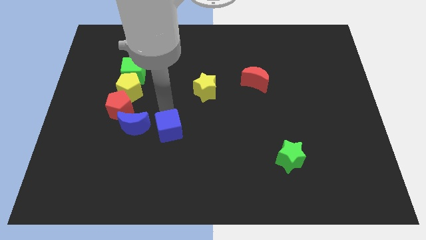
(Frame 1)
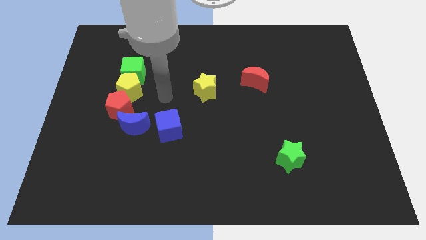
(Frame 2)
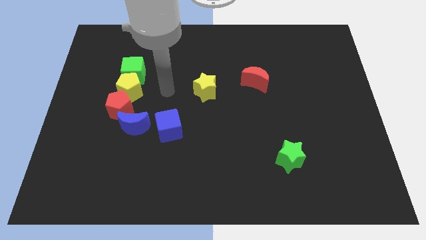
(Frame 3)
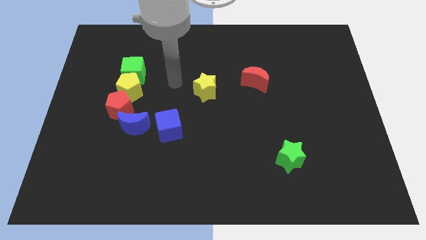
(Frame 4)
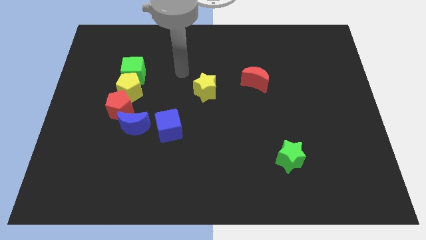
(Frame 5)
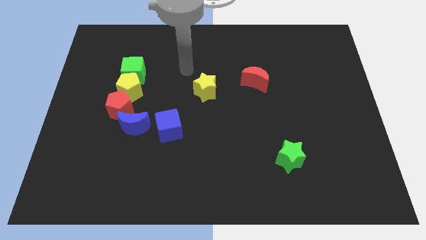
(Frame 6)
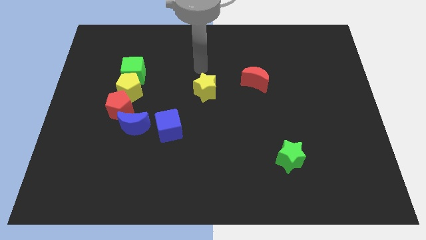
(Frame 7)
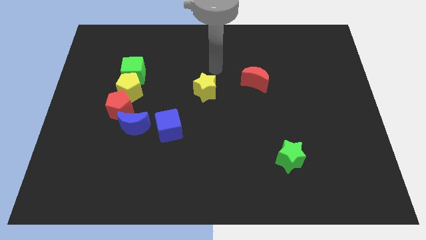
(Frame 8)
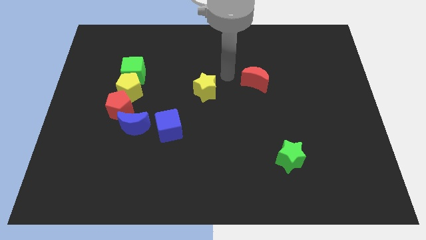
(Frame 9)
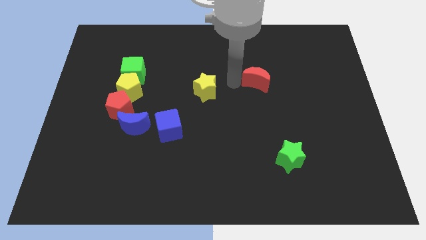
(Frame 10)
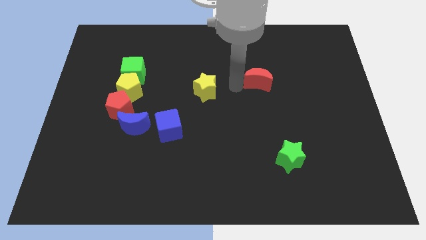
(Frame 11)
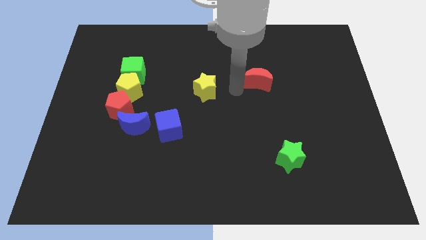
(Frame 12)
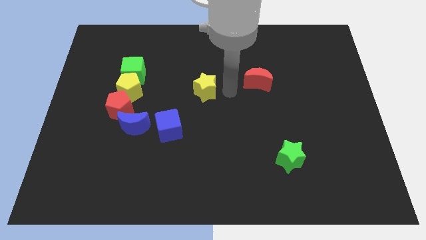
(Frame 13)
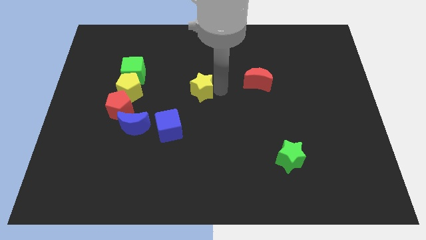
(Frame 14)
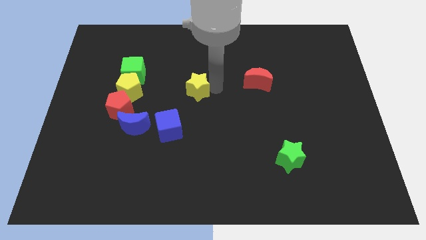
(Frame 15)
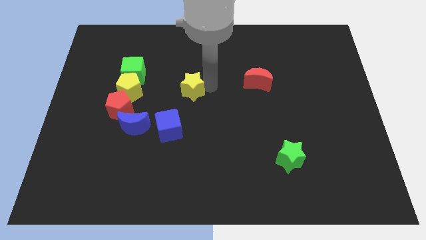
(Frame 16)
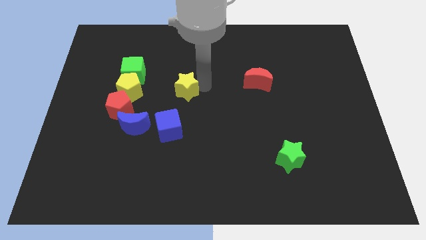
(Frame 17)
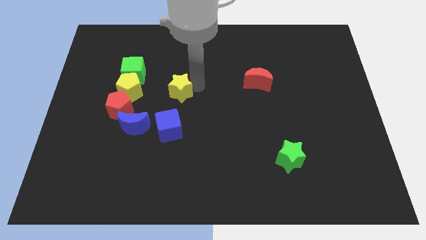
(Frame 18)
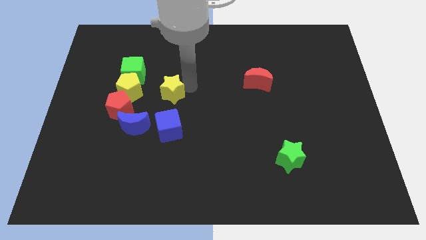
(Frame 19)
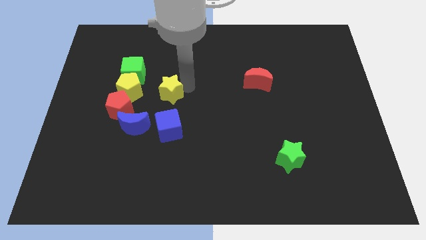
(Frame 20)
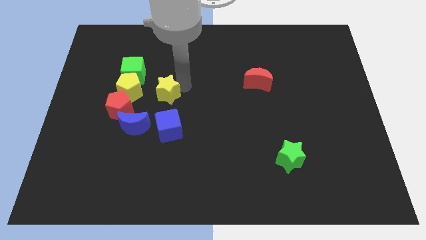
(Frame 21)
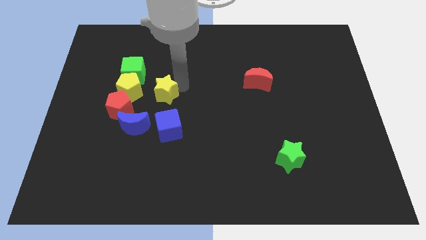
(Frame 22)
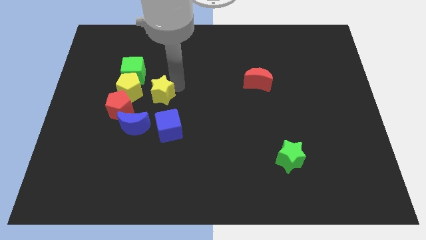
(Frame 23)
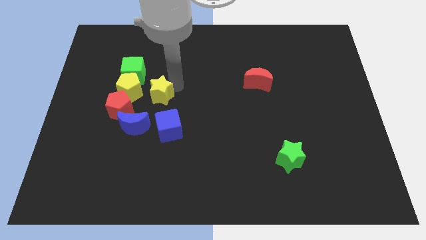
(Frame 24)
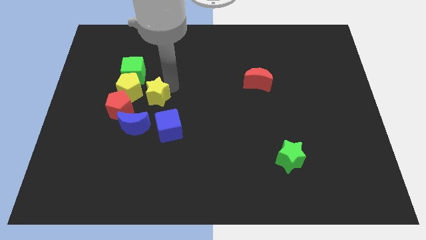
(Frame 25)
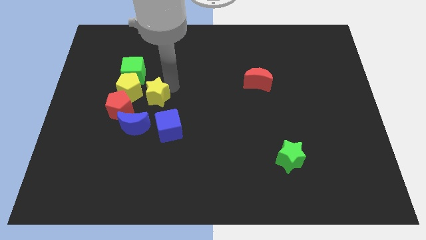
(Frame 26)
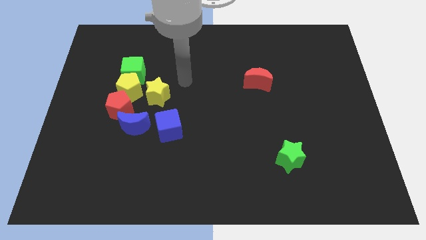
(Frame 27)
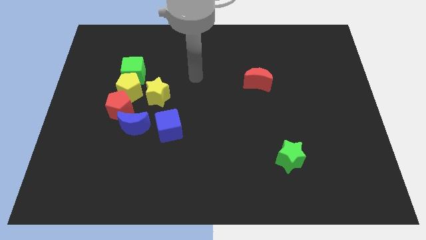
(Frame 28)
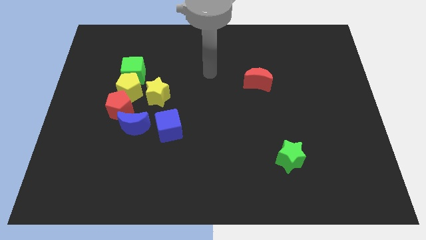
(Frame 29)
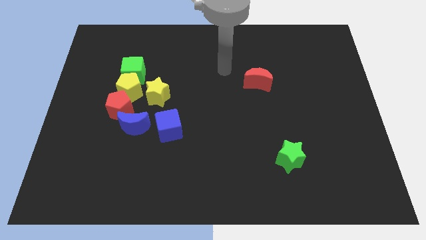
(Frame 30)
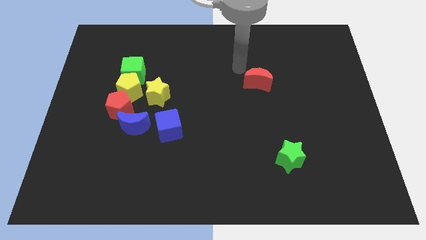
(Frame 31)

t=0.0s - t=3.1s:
place the yellow star at the right side of the yellow pentagon

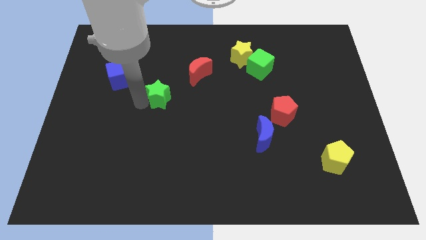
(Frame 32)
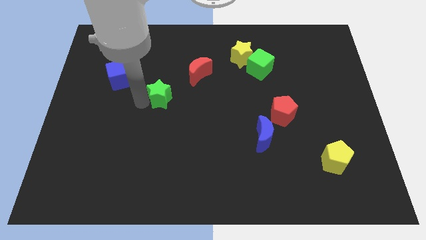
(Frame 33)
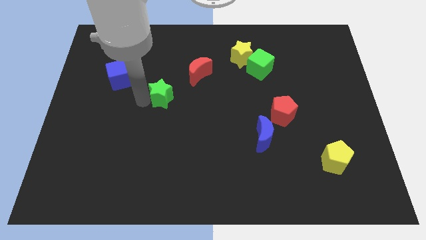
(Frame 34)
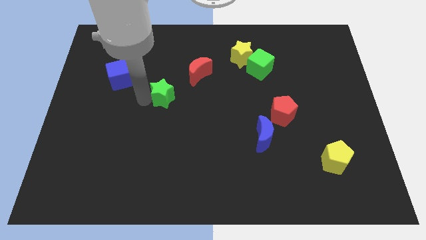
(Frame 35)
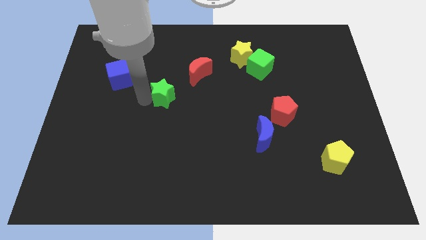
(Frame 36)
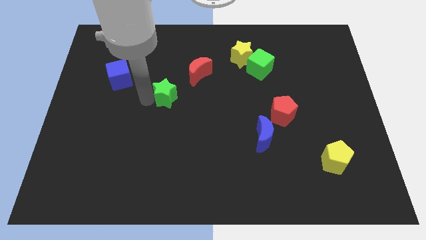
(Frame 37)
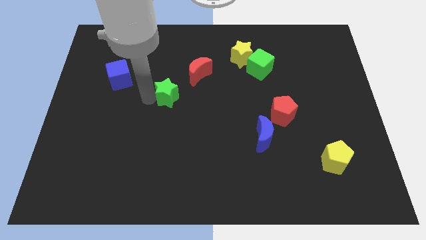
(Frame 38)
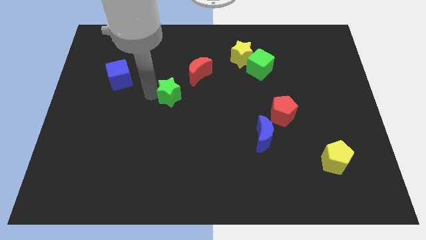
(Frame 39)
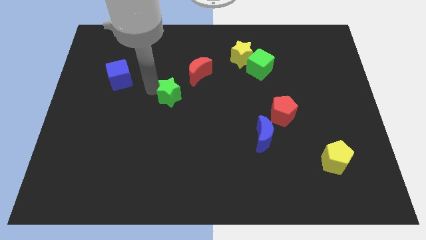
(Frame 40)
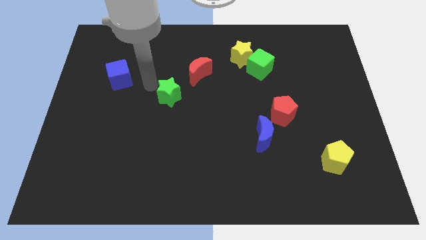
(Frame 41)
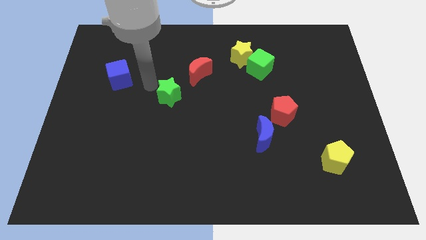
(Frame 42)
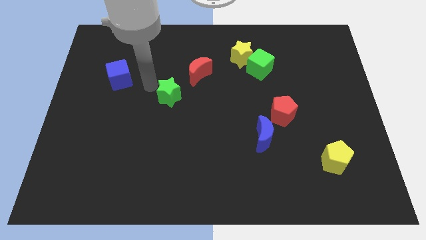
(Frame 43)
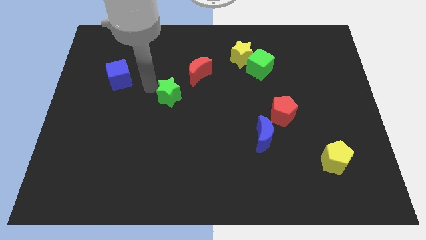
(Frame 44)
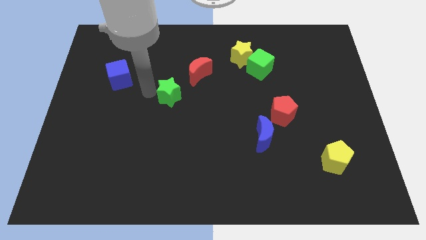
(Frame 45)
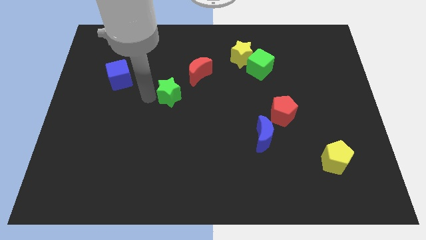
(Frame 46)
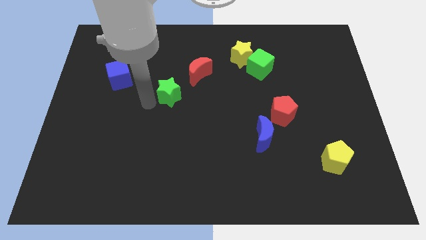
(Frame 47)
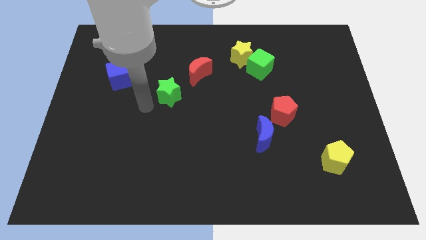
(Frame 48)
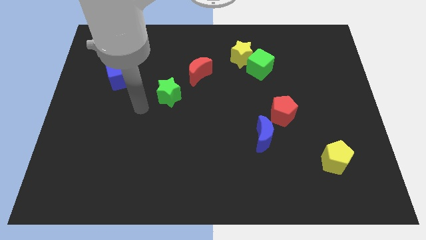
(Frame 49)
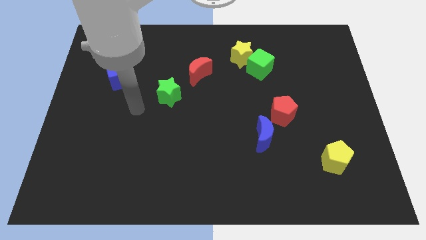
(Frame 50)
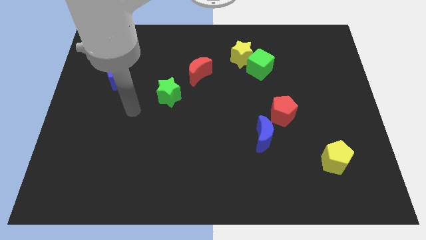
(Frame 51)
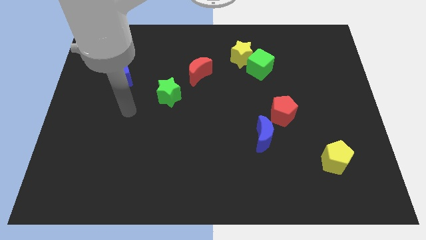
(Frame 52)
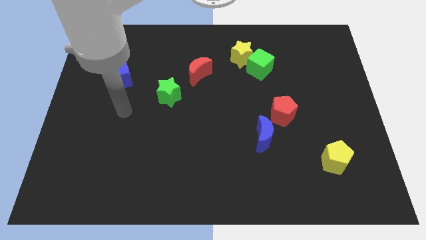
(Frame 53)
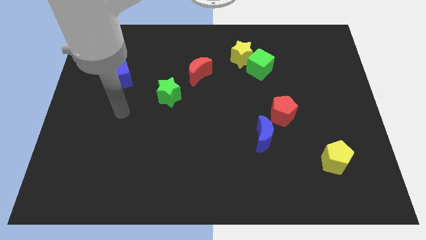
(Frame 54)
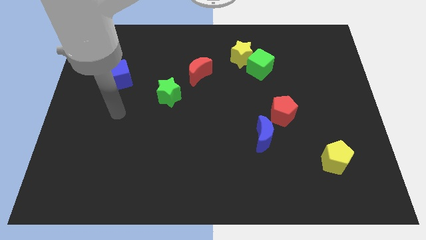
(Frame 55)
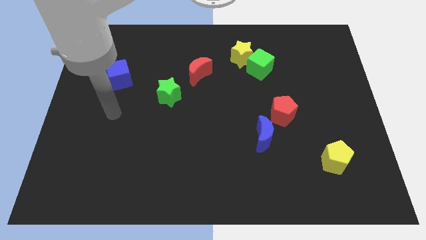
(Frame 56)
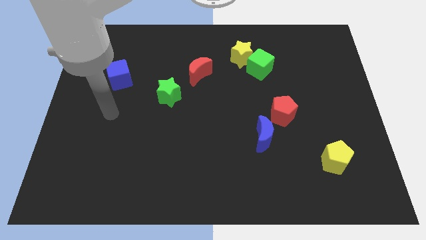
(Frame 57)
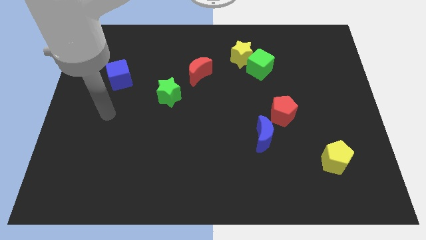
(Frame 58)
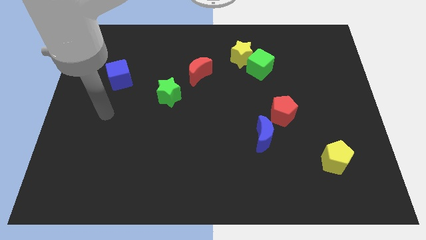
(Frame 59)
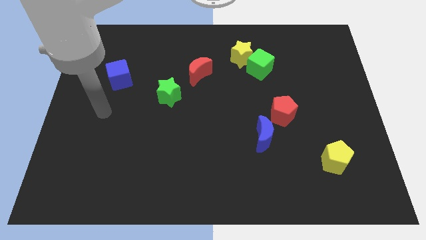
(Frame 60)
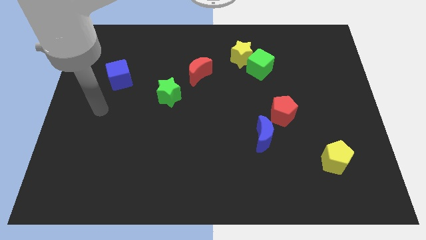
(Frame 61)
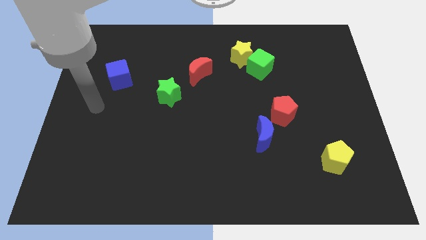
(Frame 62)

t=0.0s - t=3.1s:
move green star near the red moon

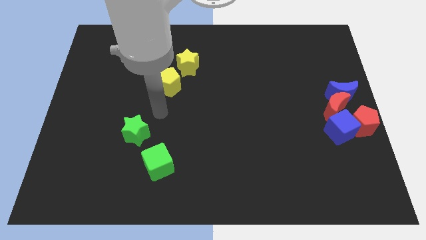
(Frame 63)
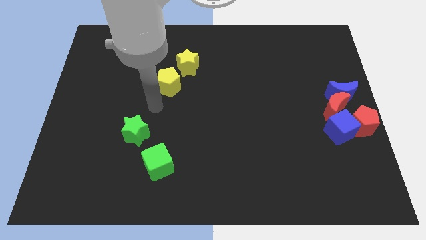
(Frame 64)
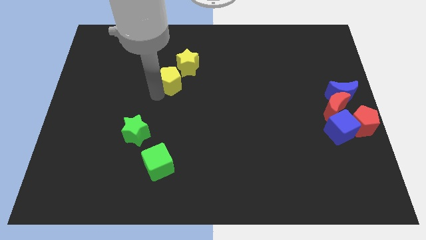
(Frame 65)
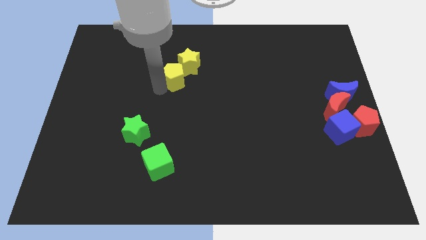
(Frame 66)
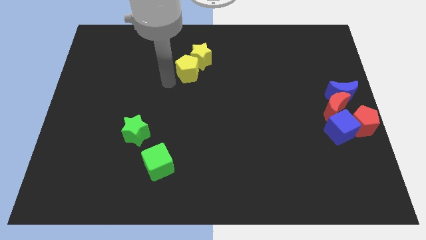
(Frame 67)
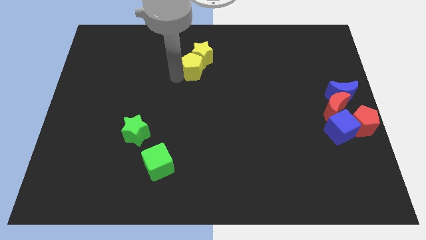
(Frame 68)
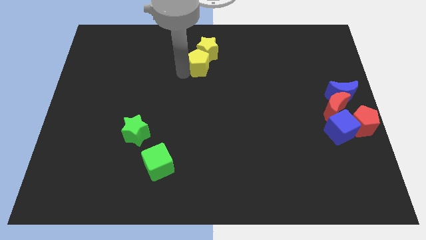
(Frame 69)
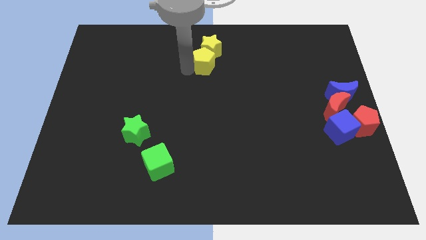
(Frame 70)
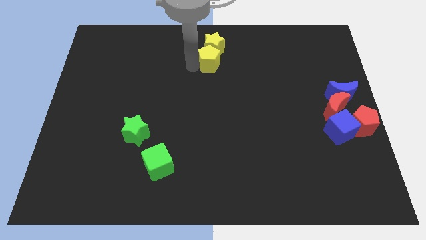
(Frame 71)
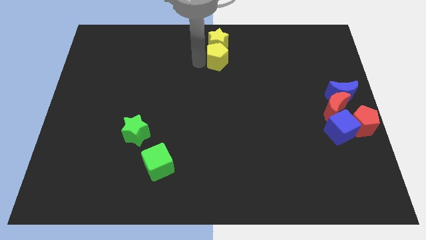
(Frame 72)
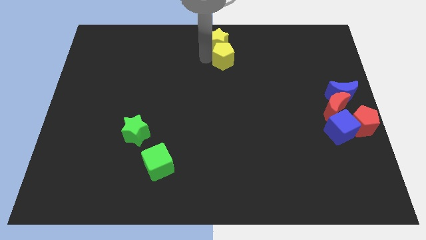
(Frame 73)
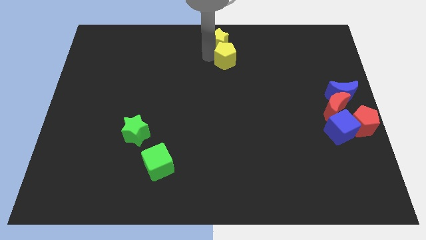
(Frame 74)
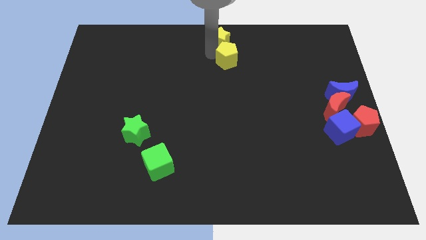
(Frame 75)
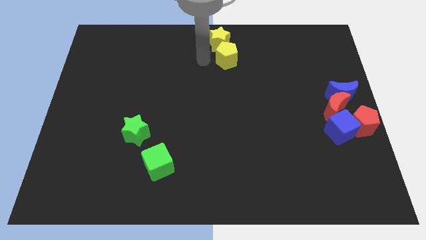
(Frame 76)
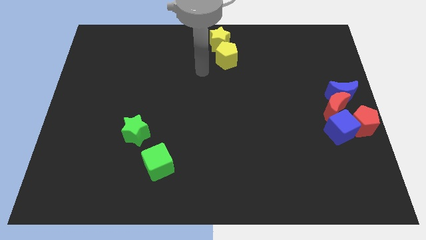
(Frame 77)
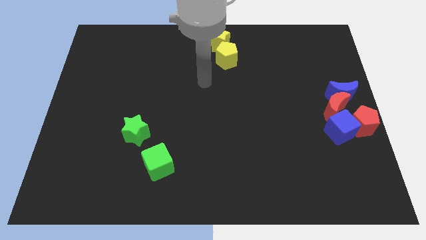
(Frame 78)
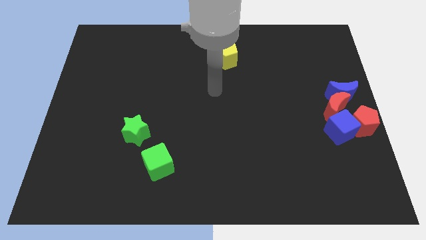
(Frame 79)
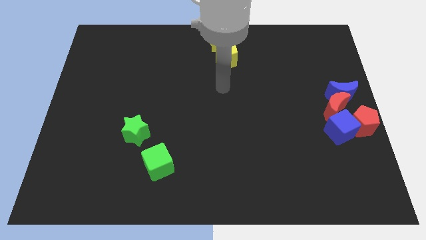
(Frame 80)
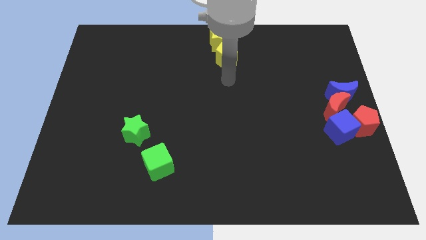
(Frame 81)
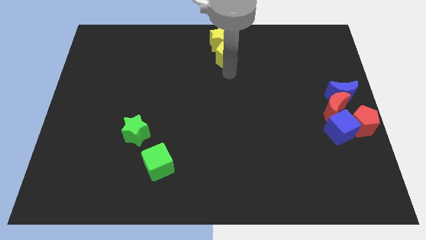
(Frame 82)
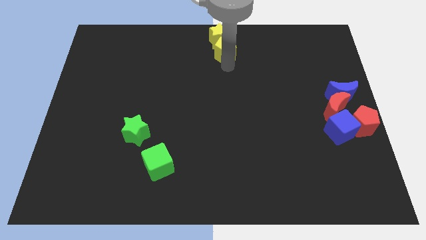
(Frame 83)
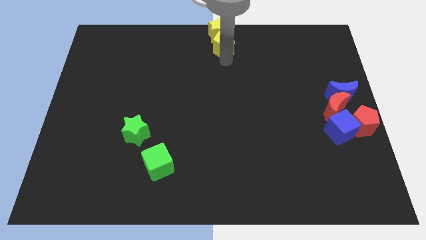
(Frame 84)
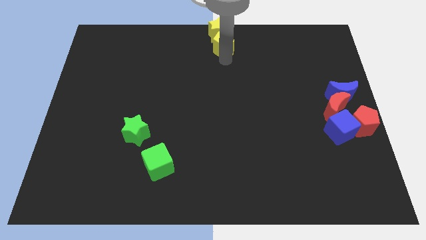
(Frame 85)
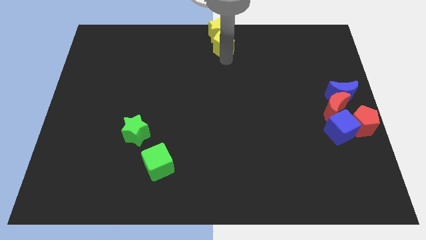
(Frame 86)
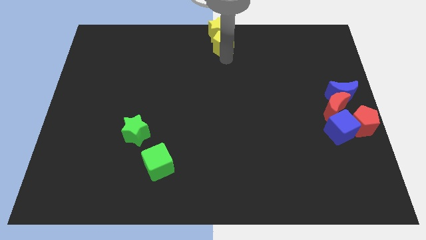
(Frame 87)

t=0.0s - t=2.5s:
push the yellow blocks on top center of the board

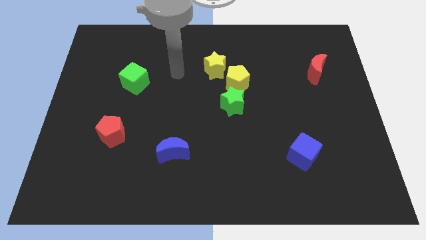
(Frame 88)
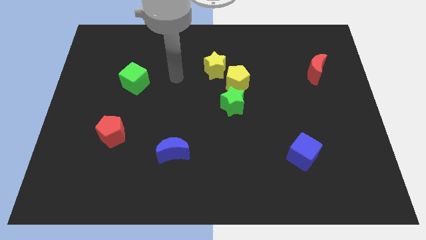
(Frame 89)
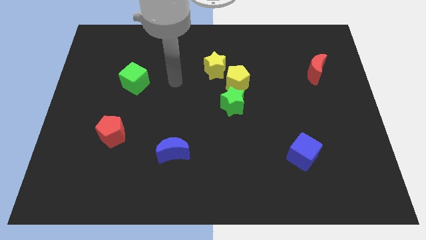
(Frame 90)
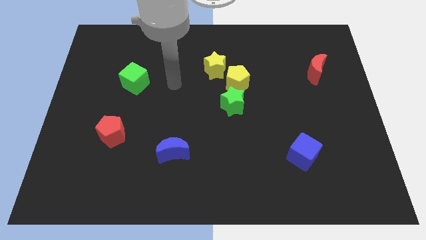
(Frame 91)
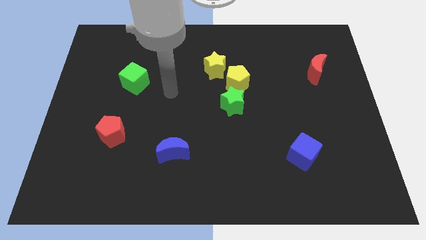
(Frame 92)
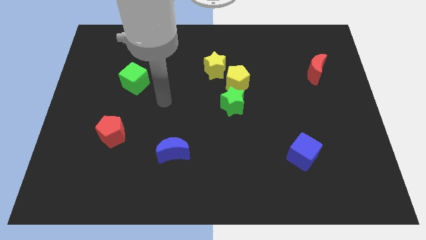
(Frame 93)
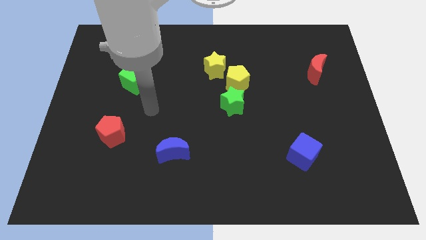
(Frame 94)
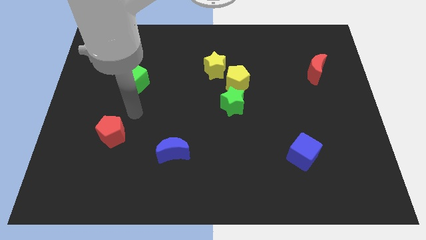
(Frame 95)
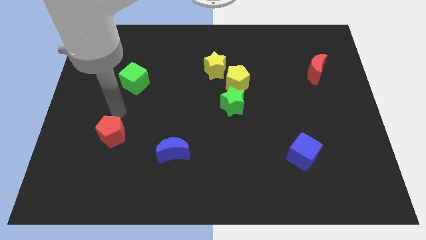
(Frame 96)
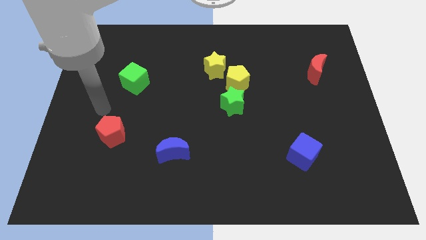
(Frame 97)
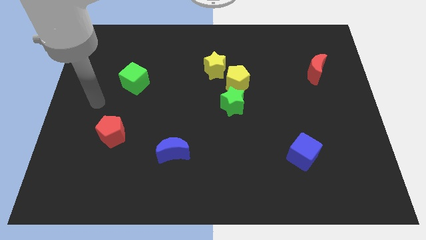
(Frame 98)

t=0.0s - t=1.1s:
slide your arm towards center left
